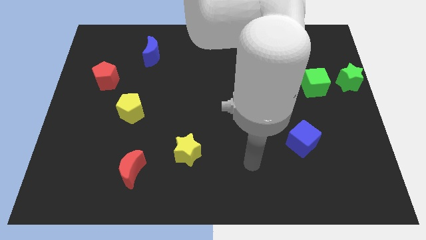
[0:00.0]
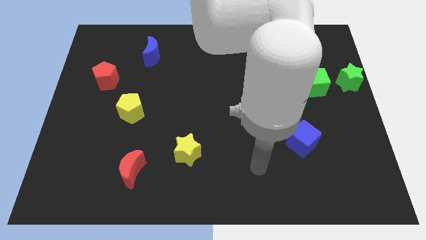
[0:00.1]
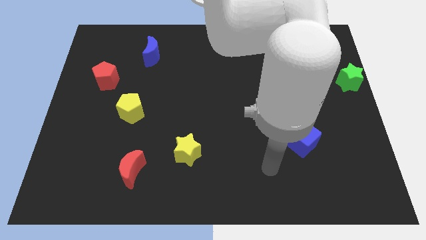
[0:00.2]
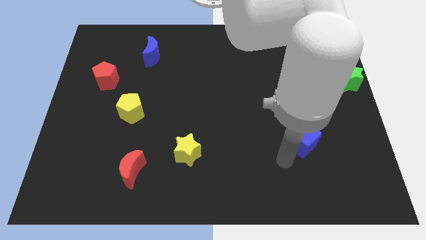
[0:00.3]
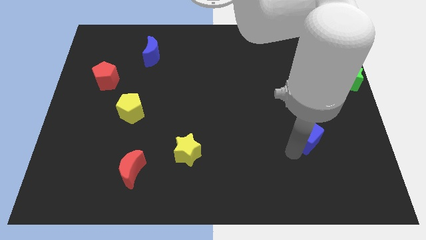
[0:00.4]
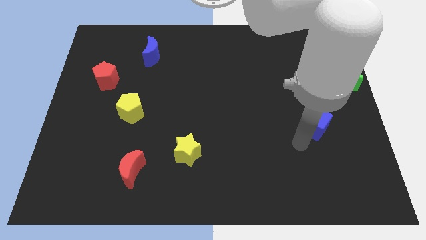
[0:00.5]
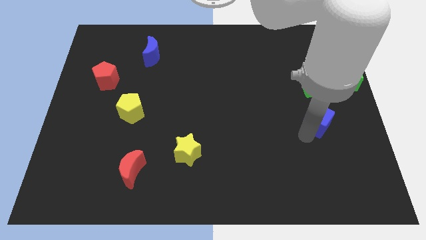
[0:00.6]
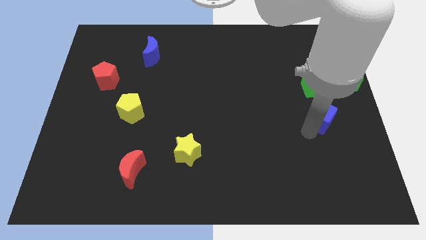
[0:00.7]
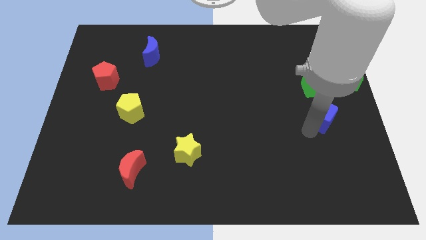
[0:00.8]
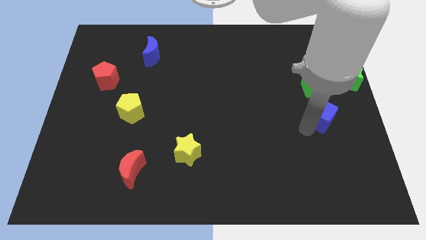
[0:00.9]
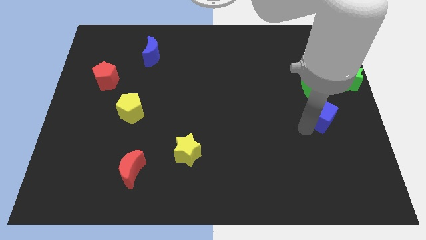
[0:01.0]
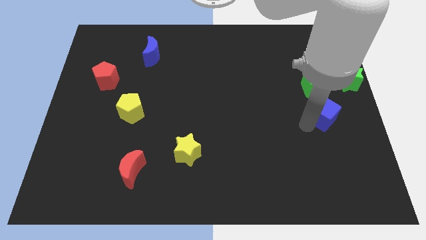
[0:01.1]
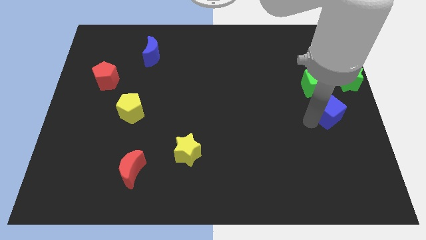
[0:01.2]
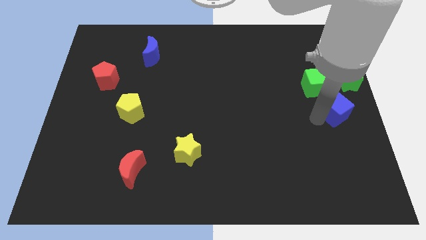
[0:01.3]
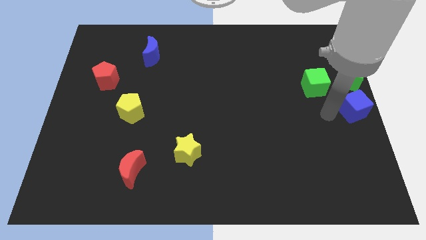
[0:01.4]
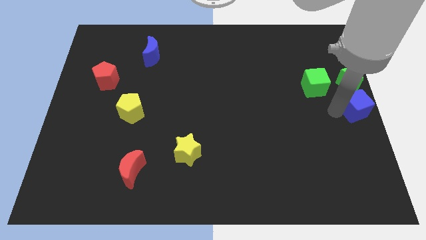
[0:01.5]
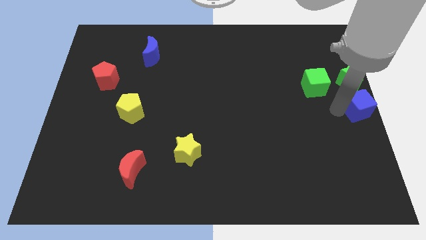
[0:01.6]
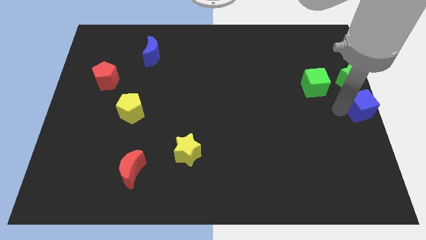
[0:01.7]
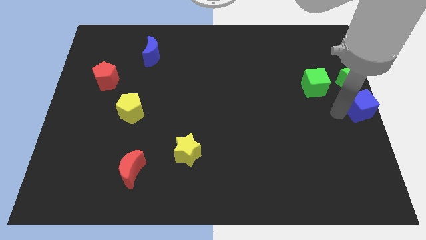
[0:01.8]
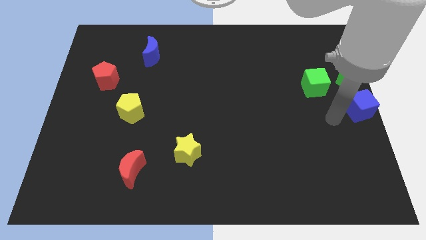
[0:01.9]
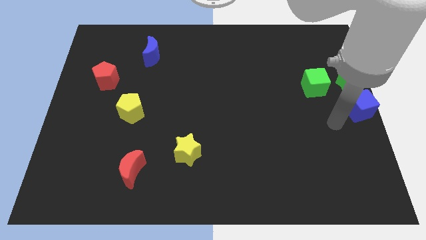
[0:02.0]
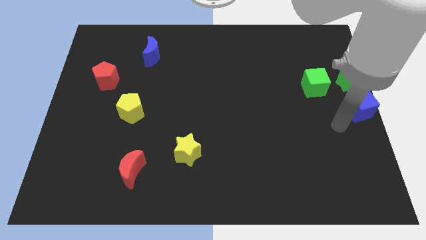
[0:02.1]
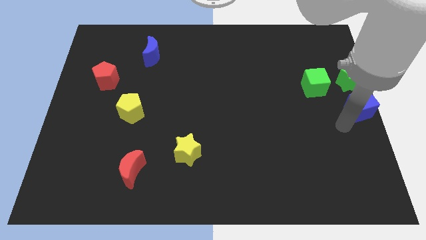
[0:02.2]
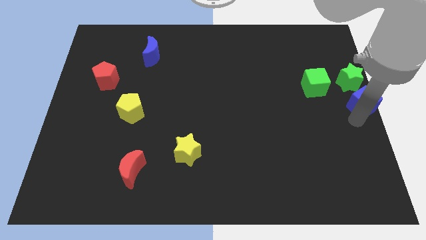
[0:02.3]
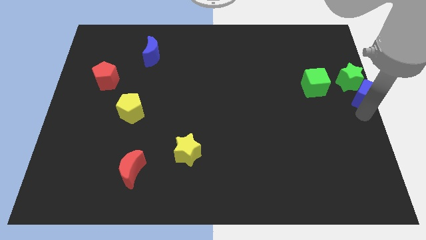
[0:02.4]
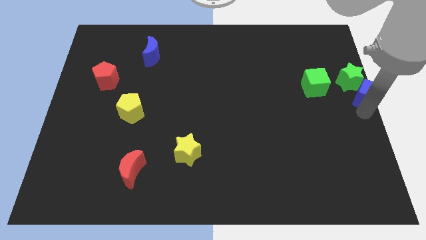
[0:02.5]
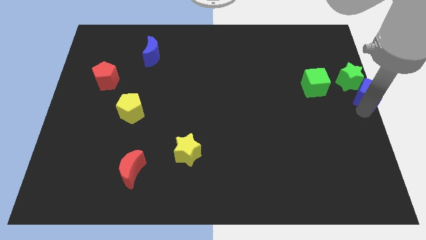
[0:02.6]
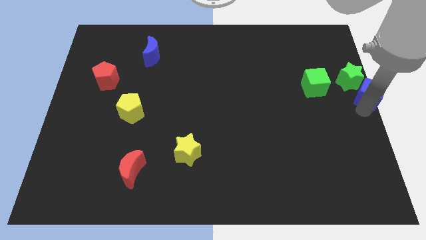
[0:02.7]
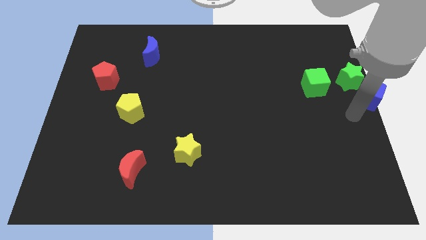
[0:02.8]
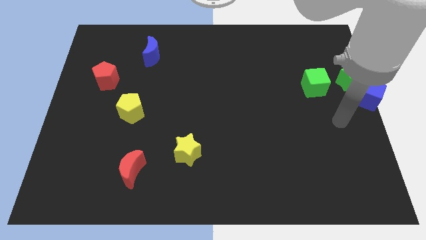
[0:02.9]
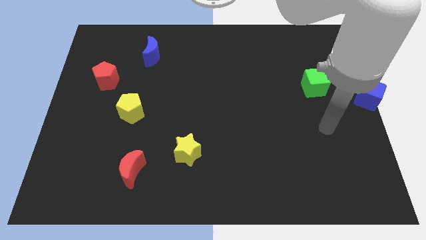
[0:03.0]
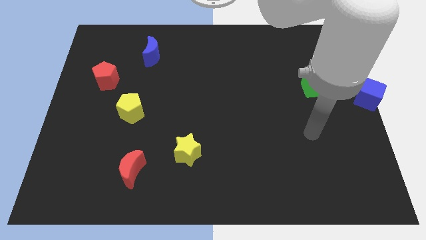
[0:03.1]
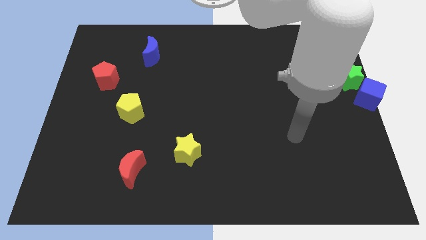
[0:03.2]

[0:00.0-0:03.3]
move the blue cube to the centre right of the board

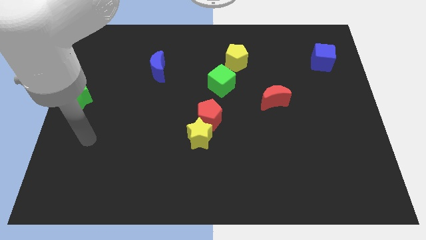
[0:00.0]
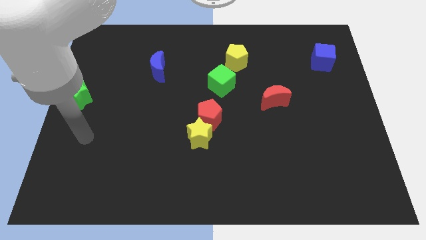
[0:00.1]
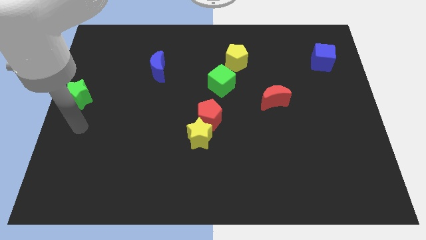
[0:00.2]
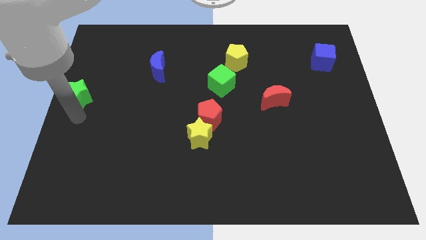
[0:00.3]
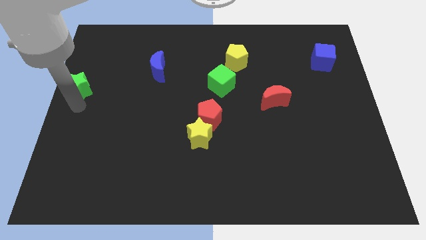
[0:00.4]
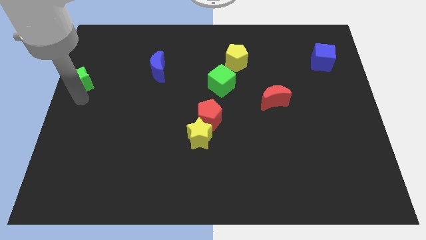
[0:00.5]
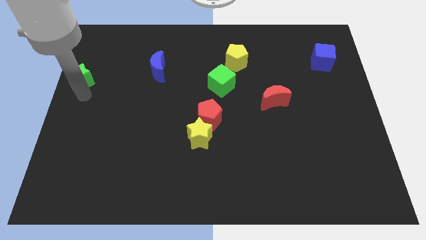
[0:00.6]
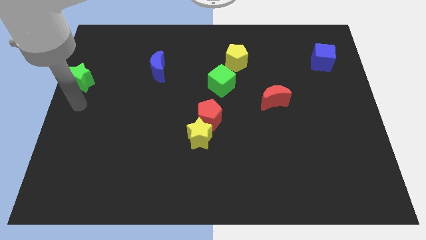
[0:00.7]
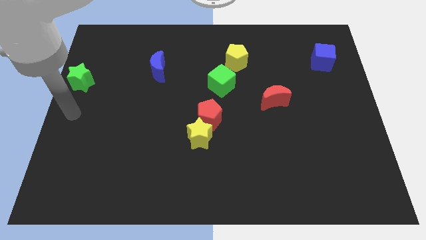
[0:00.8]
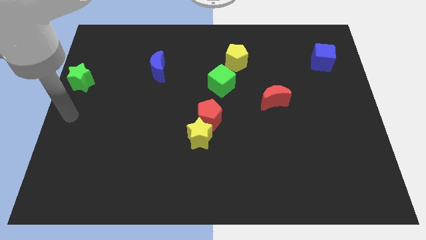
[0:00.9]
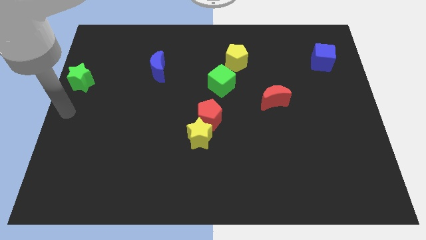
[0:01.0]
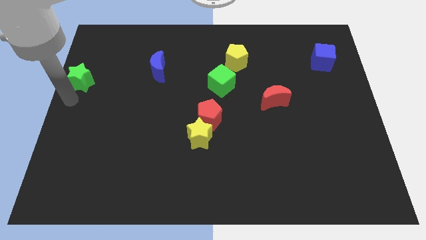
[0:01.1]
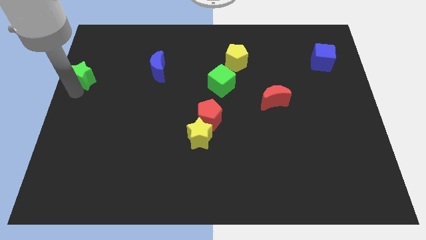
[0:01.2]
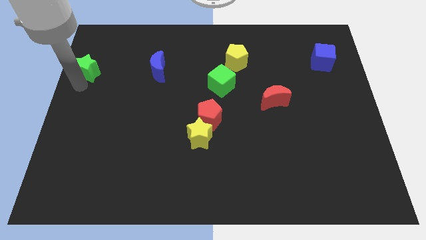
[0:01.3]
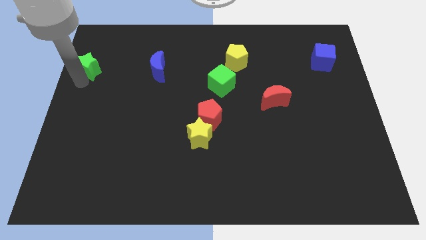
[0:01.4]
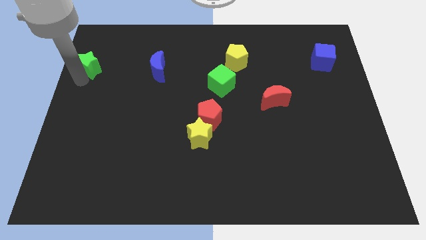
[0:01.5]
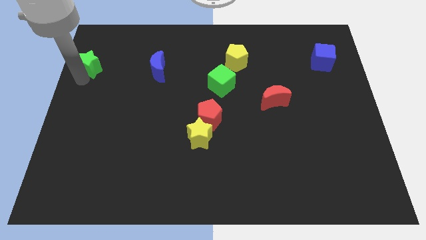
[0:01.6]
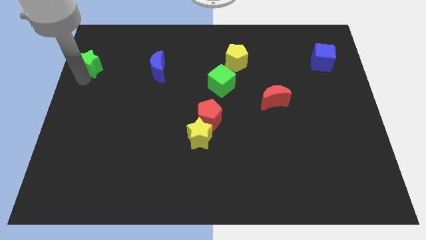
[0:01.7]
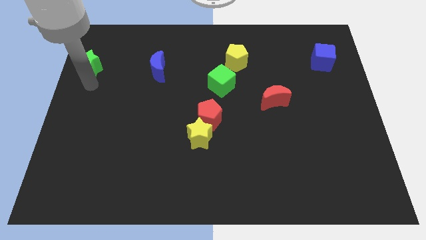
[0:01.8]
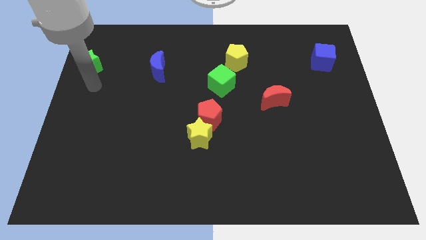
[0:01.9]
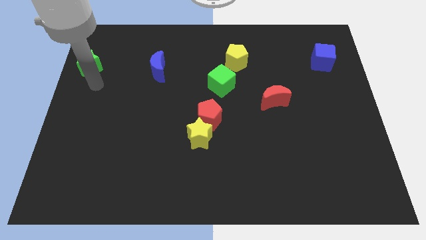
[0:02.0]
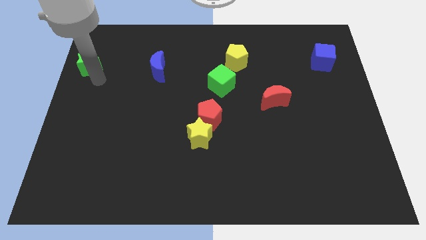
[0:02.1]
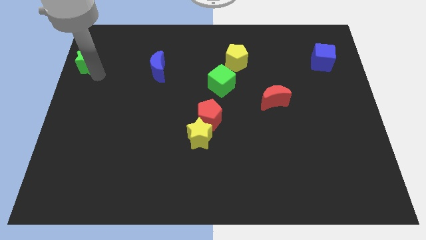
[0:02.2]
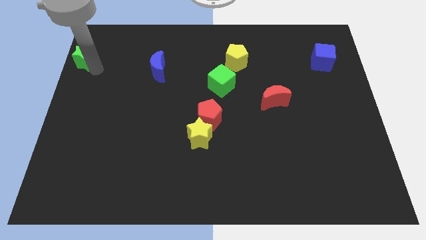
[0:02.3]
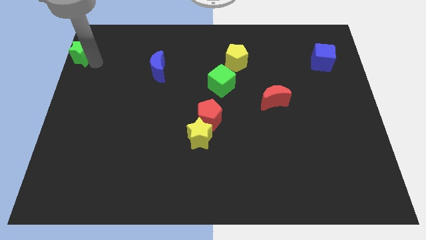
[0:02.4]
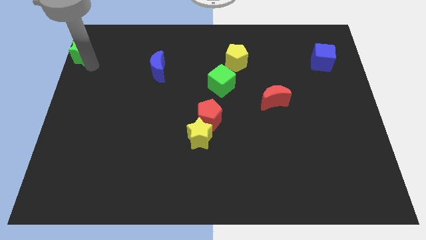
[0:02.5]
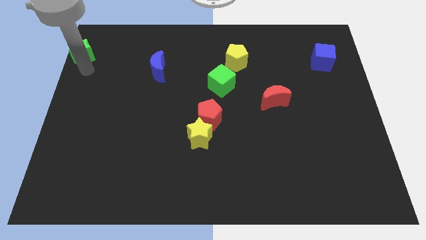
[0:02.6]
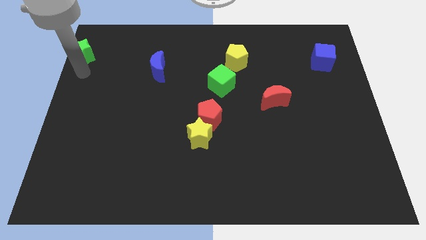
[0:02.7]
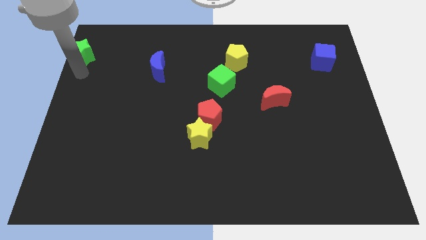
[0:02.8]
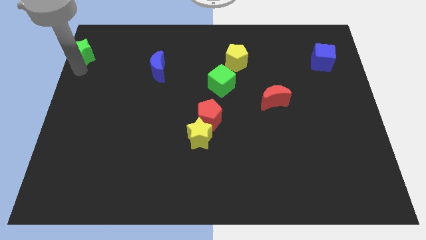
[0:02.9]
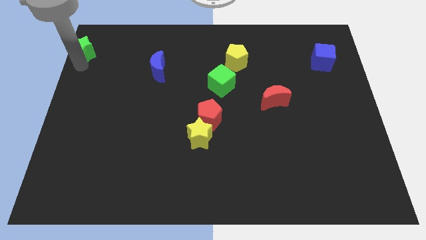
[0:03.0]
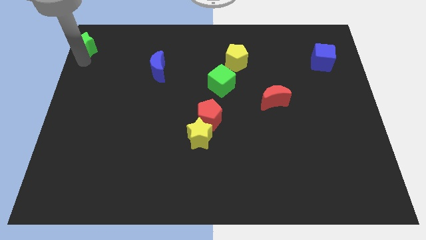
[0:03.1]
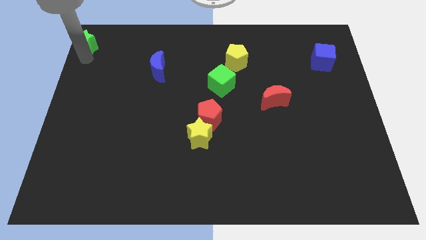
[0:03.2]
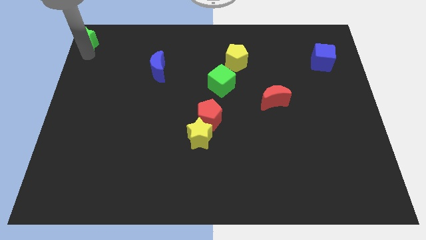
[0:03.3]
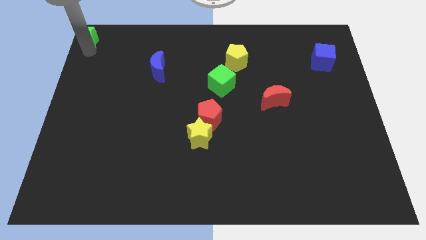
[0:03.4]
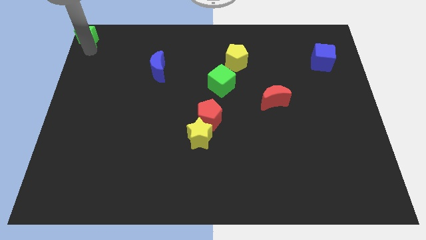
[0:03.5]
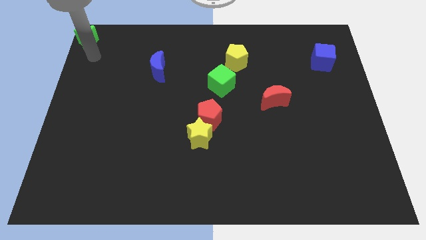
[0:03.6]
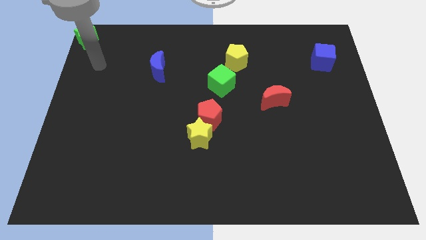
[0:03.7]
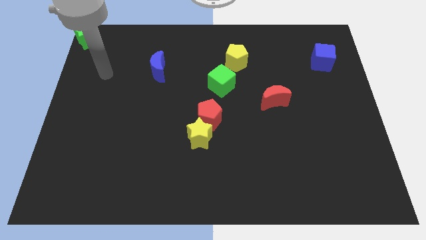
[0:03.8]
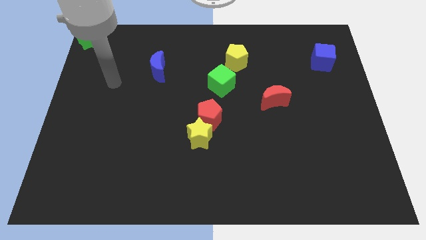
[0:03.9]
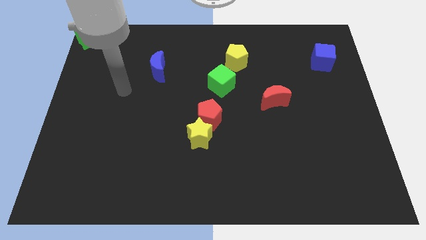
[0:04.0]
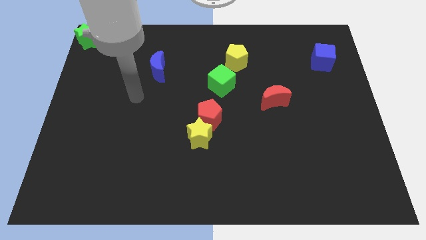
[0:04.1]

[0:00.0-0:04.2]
place green star to the top left corner of the board

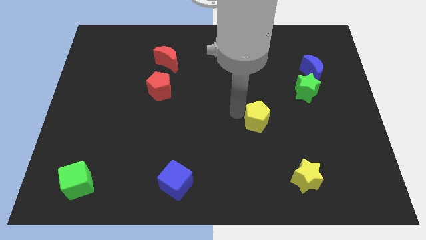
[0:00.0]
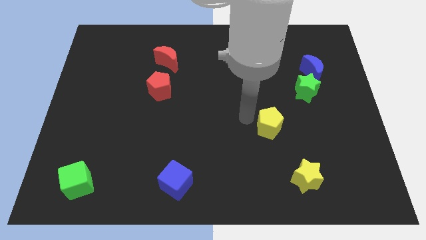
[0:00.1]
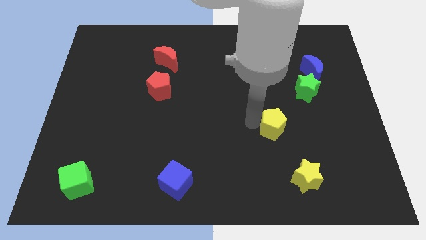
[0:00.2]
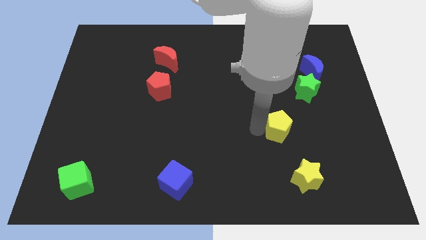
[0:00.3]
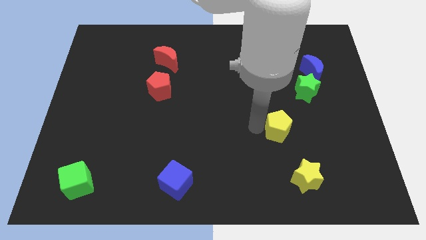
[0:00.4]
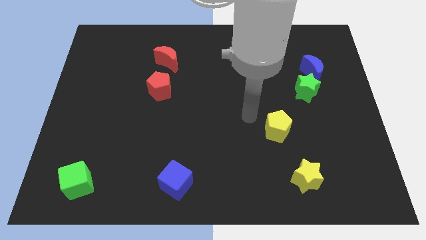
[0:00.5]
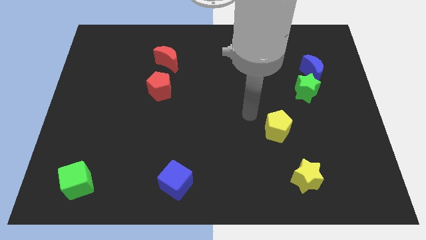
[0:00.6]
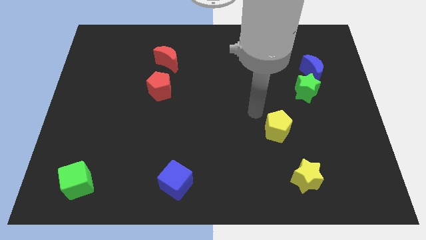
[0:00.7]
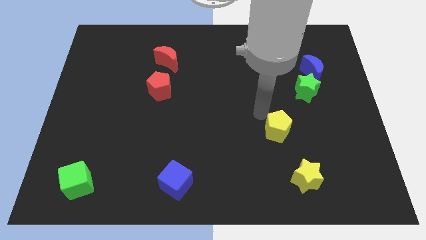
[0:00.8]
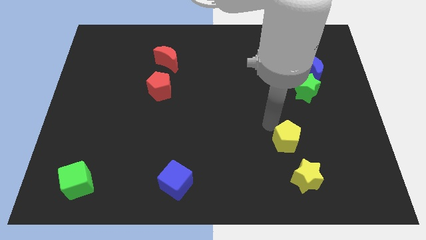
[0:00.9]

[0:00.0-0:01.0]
slide yellow pentagon towards yellow star

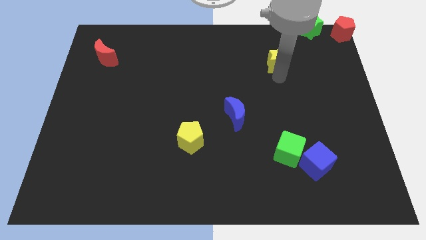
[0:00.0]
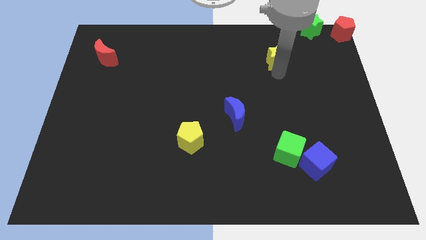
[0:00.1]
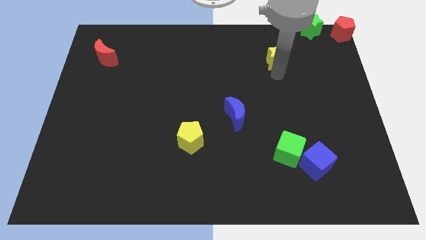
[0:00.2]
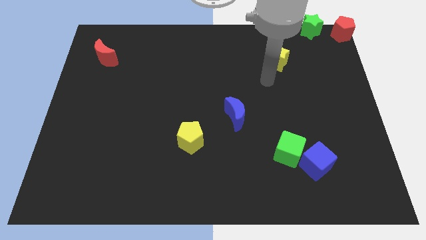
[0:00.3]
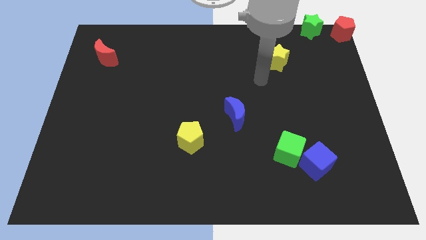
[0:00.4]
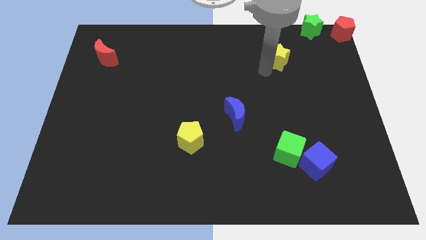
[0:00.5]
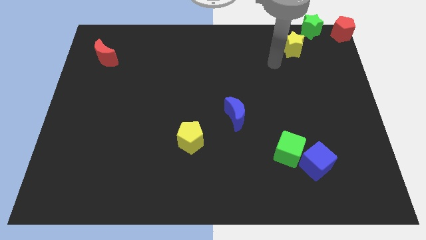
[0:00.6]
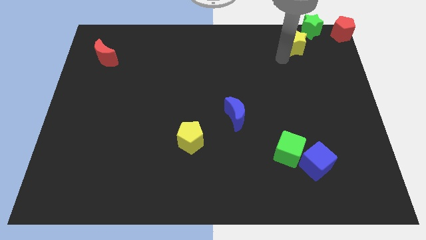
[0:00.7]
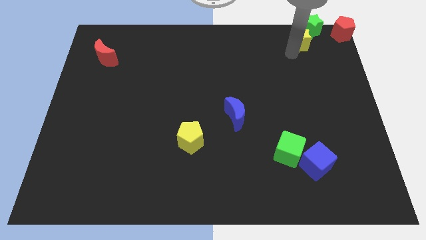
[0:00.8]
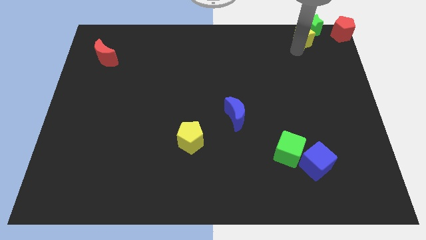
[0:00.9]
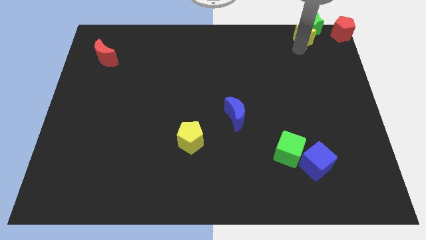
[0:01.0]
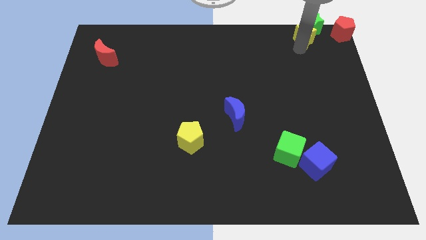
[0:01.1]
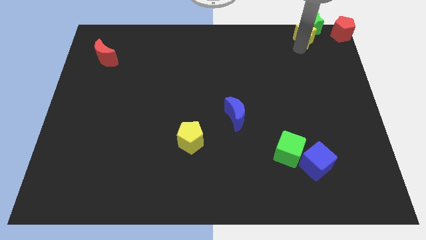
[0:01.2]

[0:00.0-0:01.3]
push yellow star to top right corner
